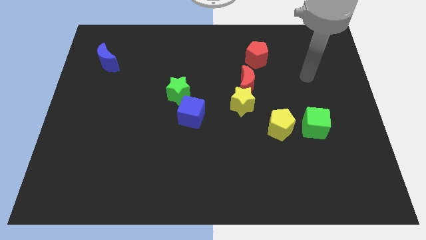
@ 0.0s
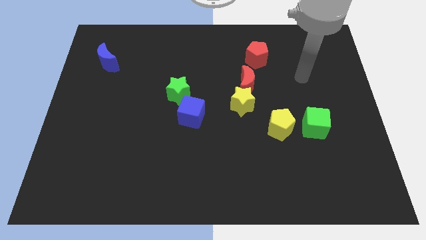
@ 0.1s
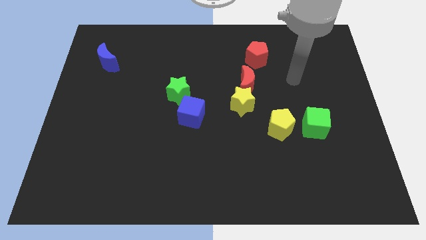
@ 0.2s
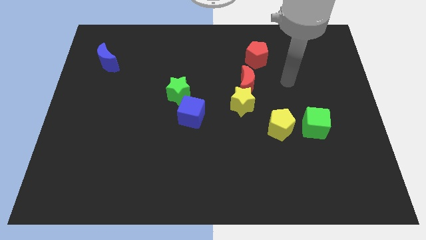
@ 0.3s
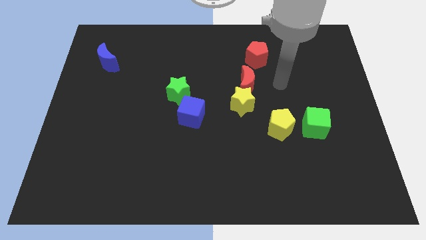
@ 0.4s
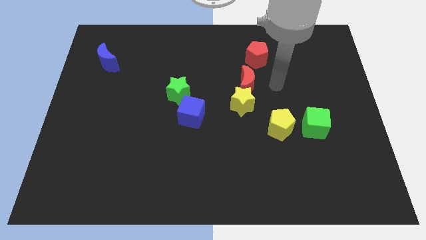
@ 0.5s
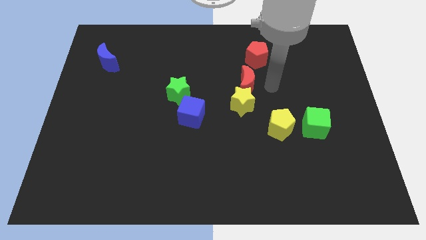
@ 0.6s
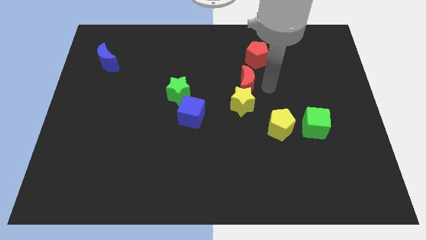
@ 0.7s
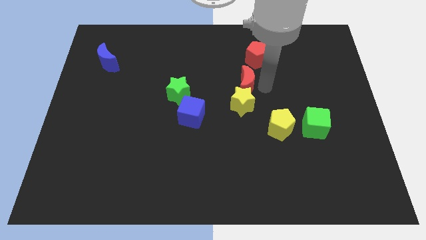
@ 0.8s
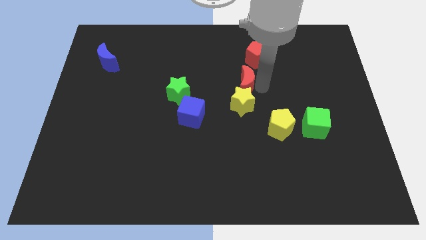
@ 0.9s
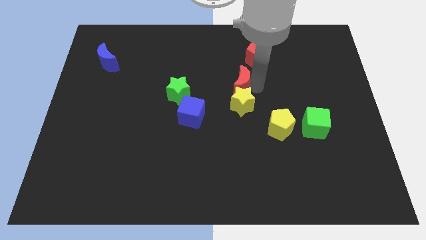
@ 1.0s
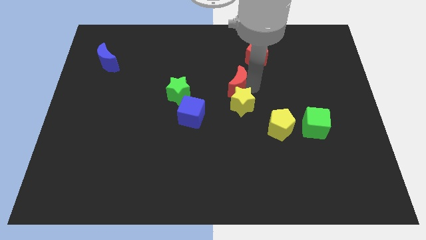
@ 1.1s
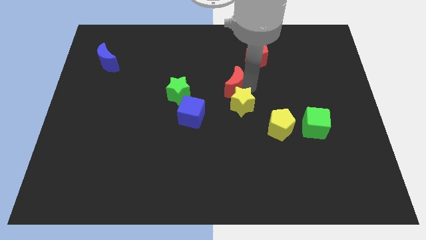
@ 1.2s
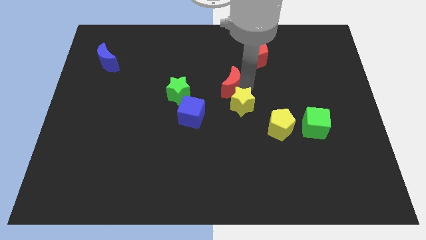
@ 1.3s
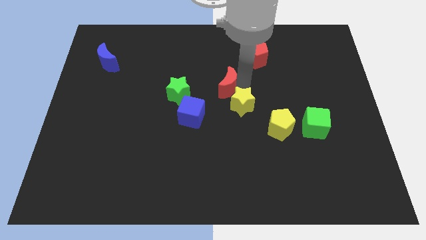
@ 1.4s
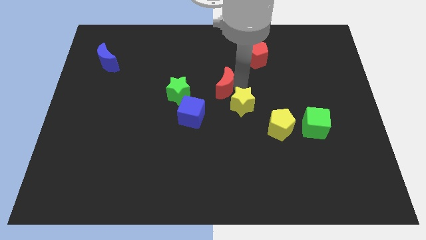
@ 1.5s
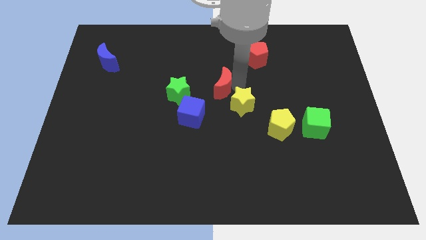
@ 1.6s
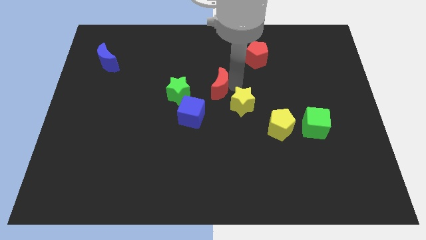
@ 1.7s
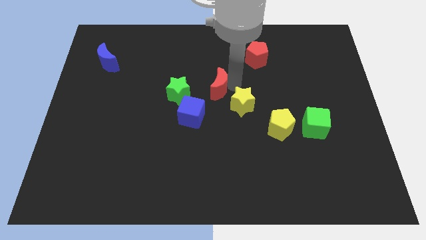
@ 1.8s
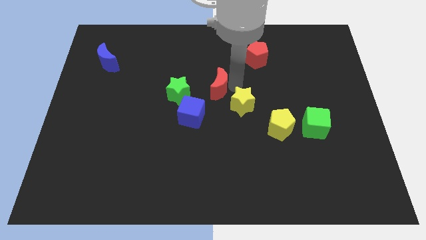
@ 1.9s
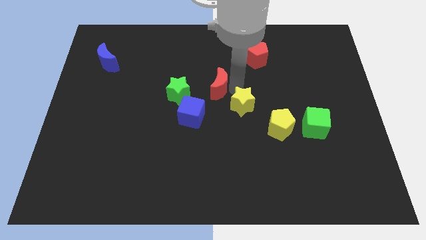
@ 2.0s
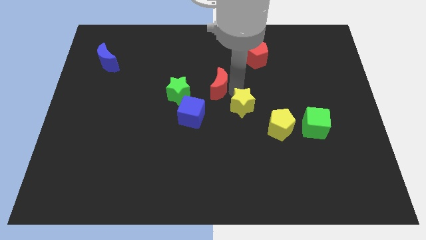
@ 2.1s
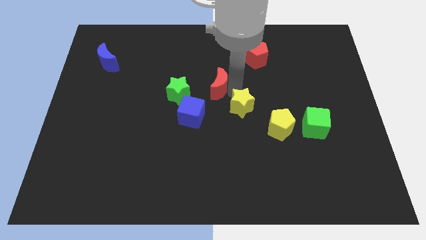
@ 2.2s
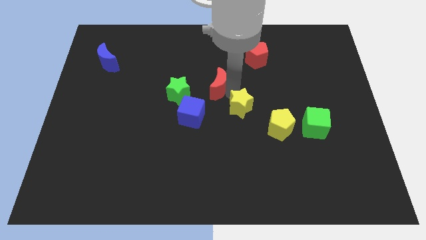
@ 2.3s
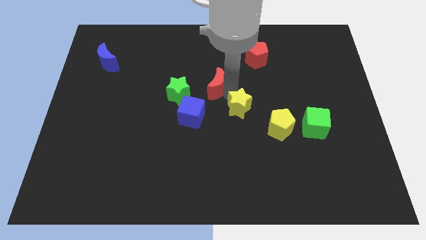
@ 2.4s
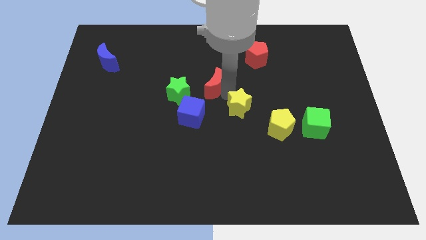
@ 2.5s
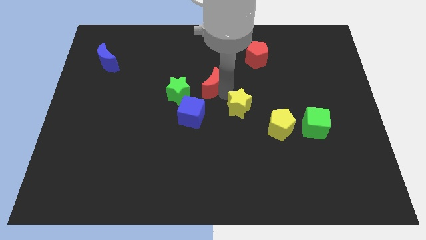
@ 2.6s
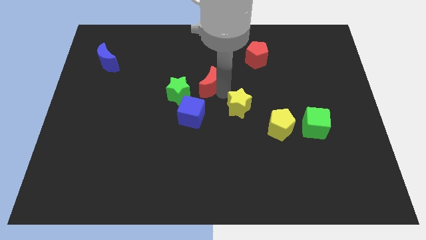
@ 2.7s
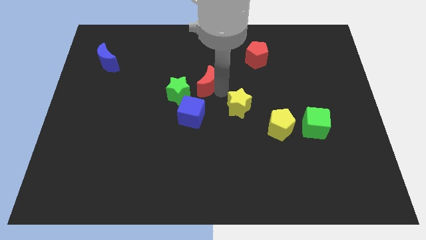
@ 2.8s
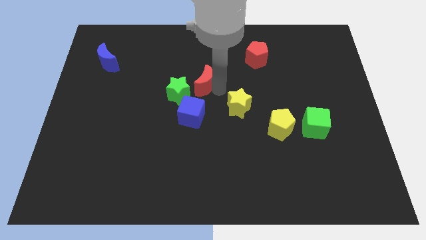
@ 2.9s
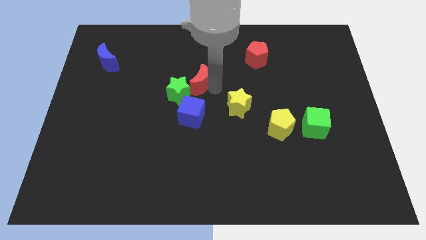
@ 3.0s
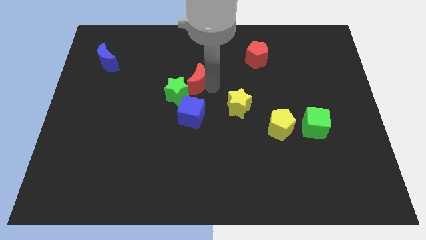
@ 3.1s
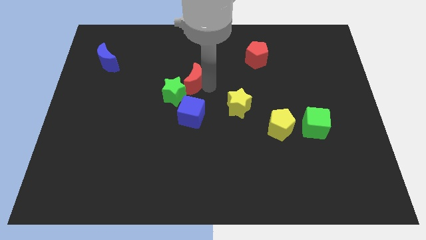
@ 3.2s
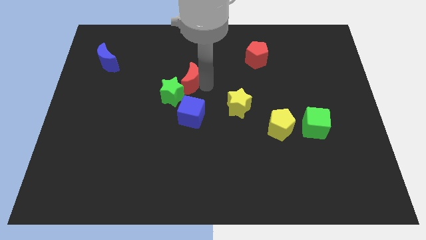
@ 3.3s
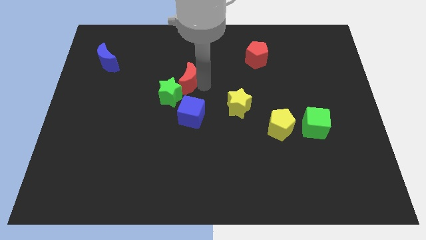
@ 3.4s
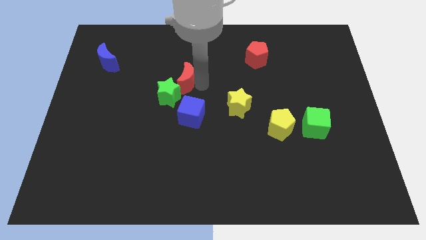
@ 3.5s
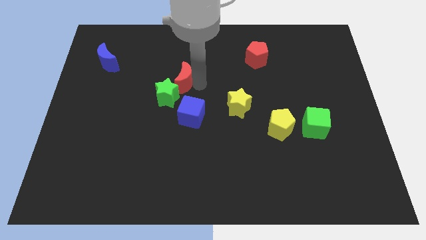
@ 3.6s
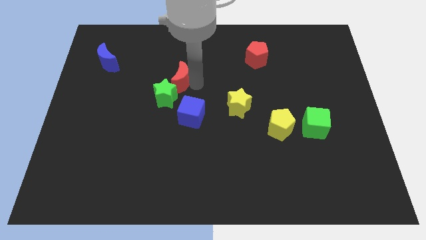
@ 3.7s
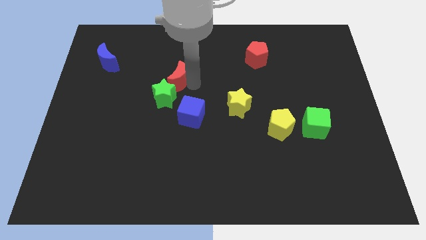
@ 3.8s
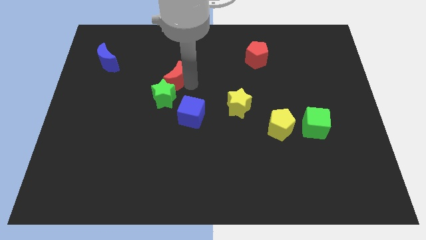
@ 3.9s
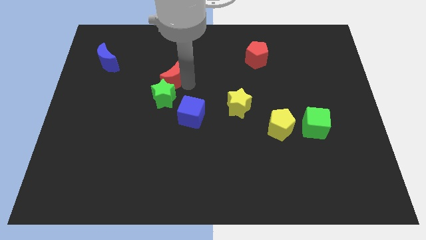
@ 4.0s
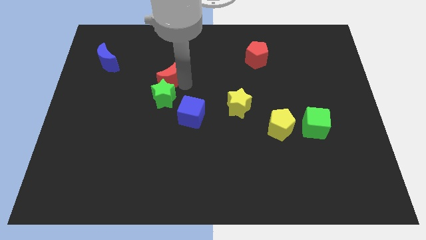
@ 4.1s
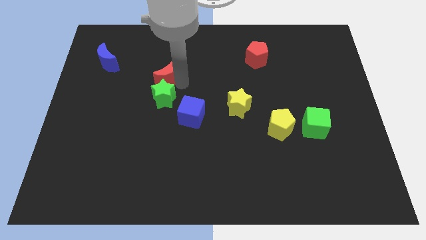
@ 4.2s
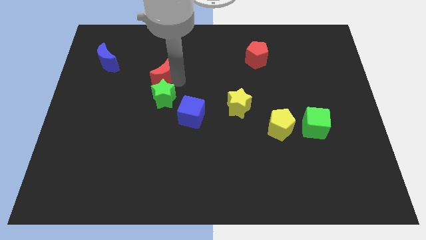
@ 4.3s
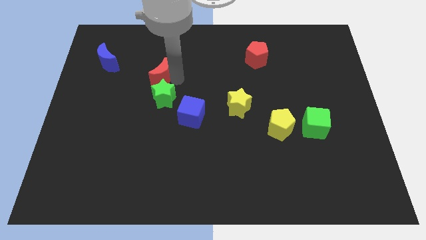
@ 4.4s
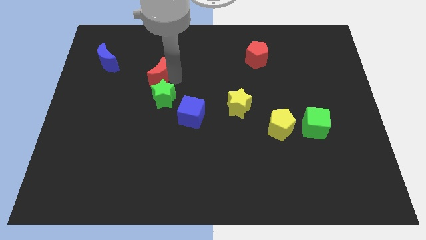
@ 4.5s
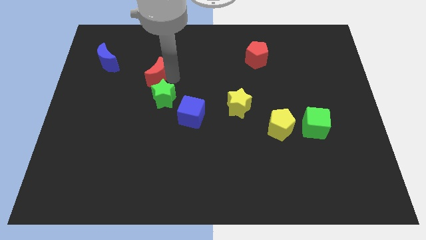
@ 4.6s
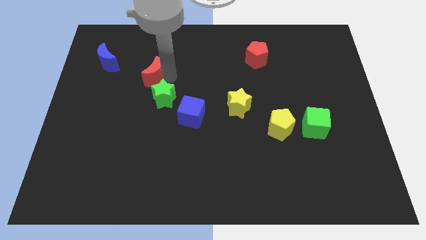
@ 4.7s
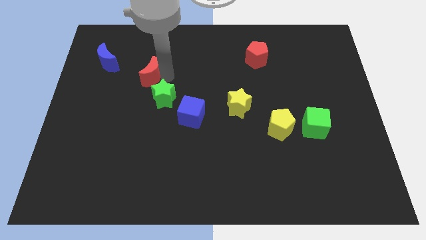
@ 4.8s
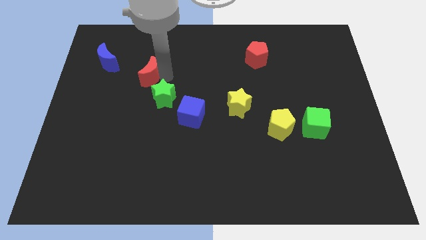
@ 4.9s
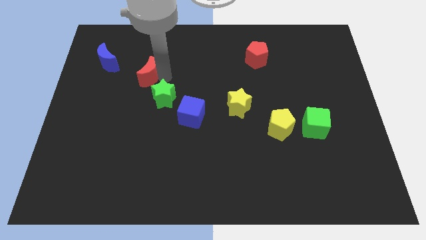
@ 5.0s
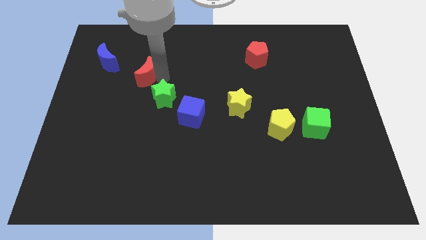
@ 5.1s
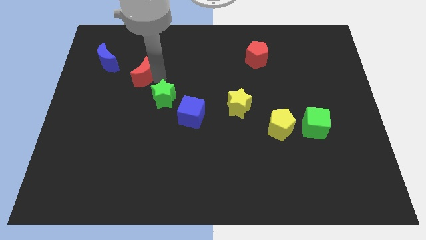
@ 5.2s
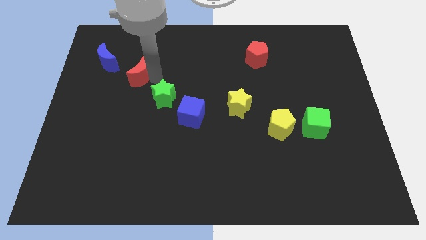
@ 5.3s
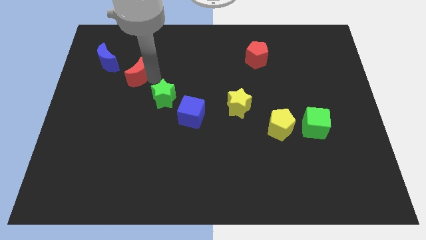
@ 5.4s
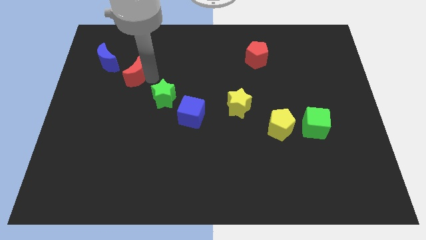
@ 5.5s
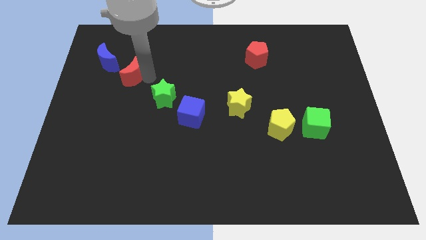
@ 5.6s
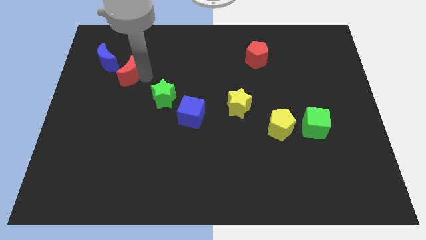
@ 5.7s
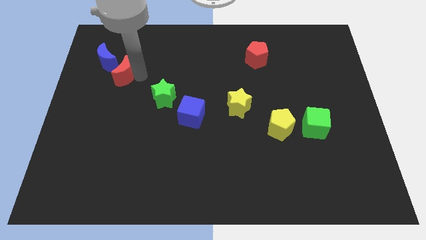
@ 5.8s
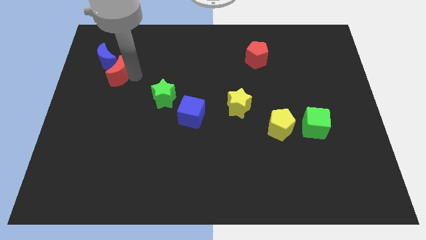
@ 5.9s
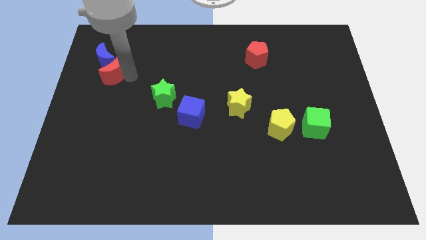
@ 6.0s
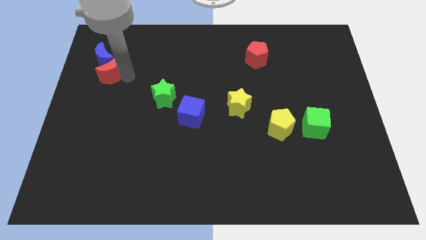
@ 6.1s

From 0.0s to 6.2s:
push the red moon close to the blue moon

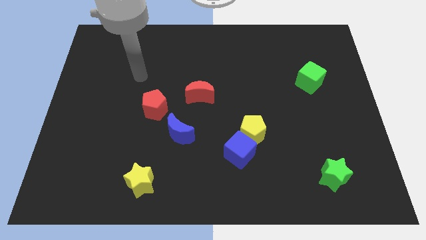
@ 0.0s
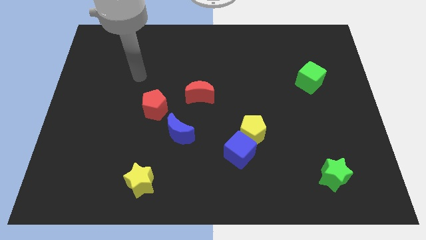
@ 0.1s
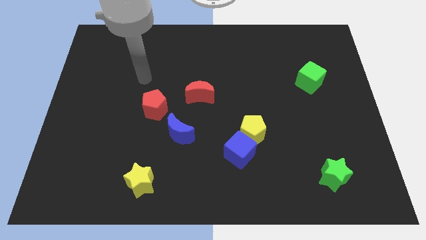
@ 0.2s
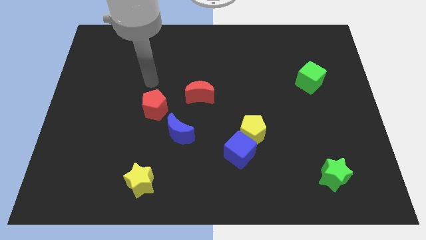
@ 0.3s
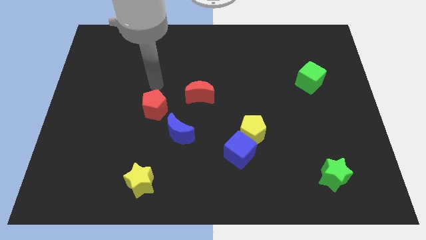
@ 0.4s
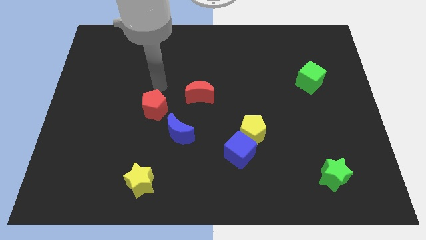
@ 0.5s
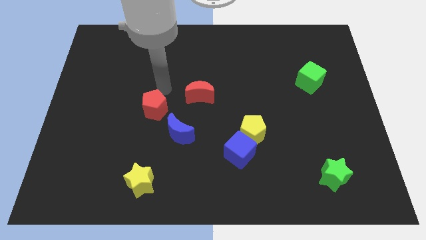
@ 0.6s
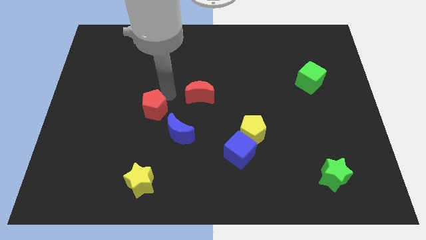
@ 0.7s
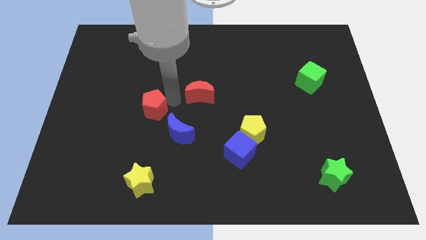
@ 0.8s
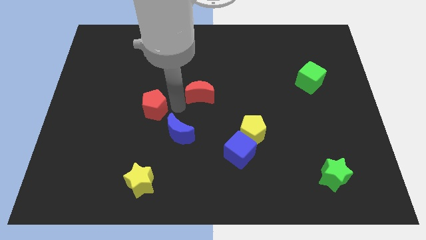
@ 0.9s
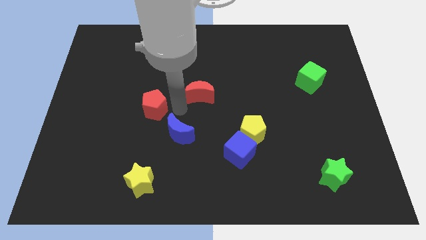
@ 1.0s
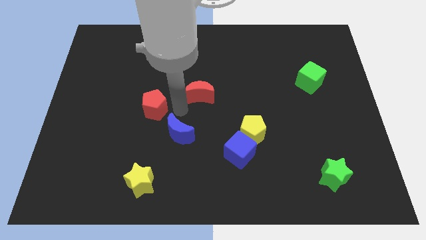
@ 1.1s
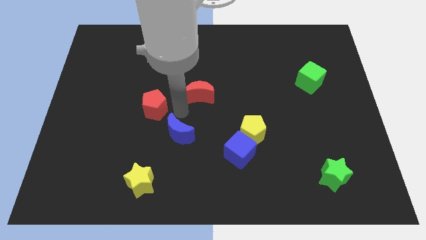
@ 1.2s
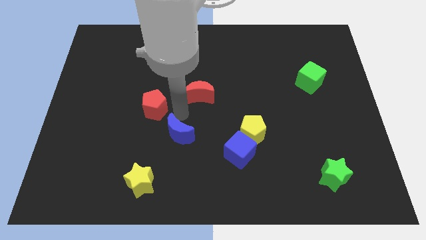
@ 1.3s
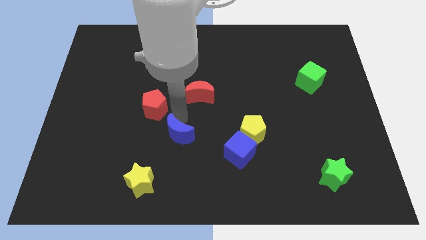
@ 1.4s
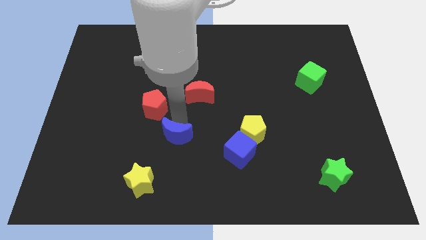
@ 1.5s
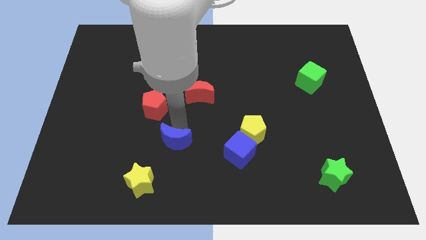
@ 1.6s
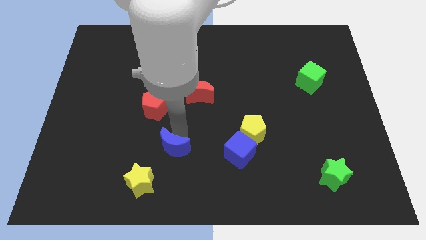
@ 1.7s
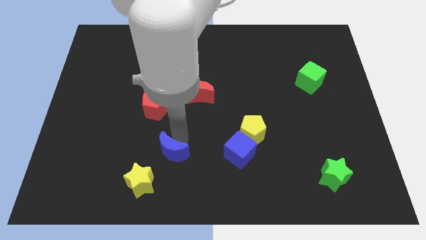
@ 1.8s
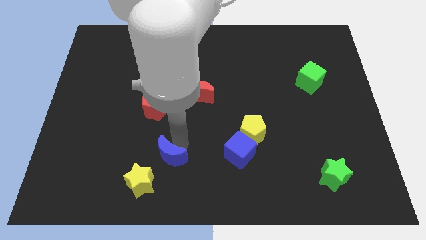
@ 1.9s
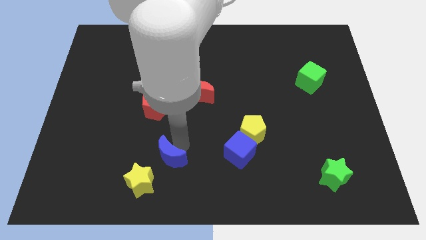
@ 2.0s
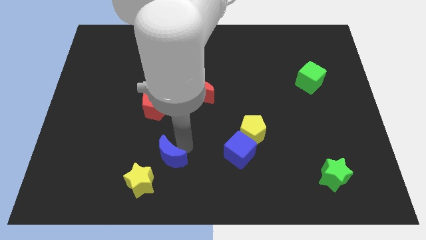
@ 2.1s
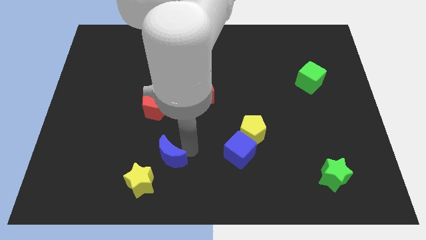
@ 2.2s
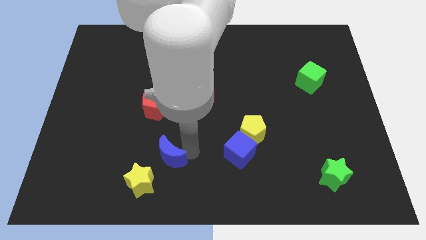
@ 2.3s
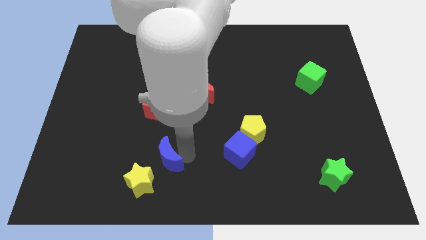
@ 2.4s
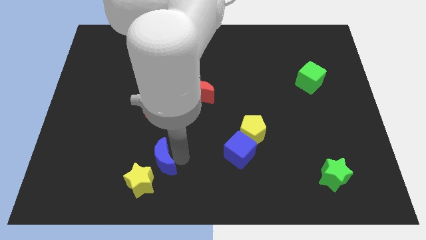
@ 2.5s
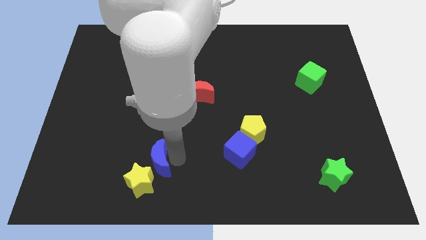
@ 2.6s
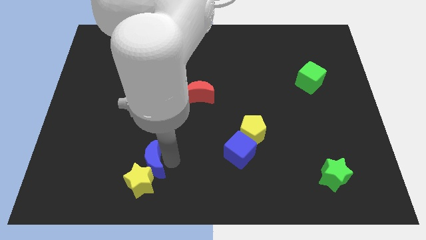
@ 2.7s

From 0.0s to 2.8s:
move the blue moon next to the yellow star
